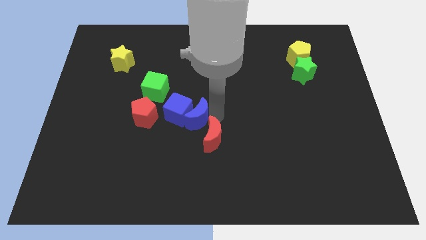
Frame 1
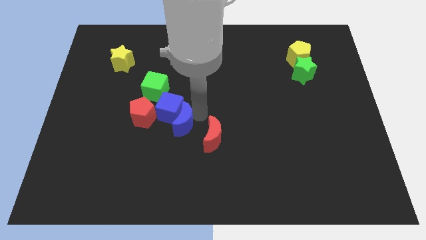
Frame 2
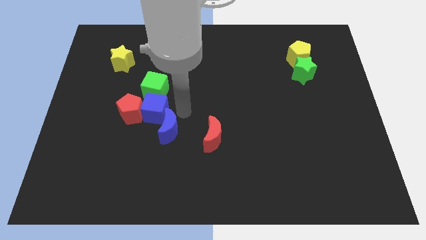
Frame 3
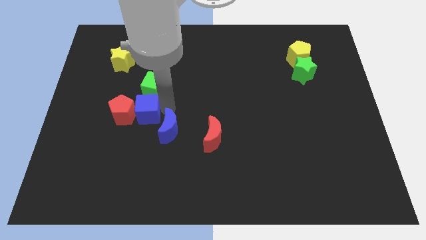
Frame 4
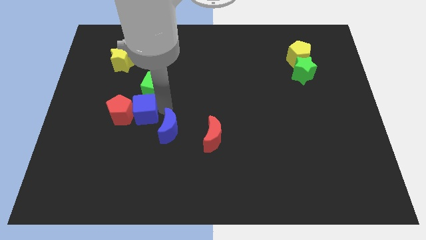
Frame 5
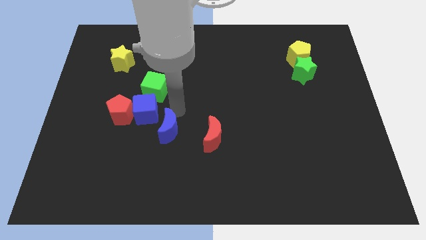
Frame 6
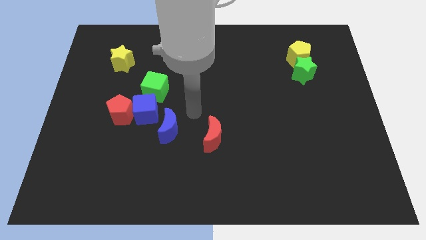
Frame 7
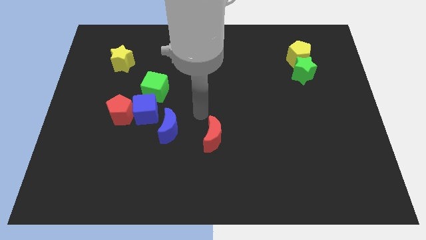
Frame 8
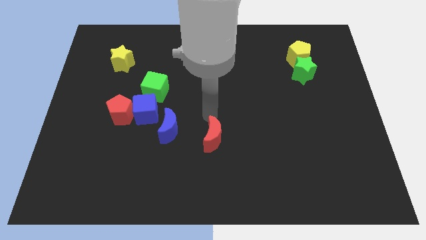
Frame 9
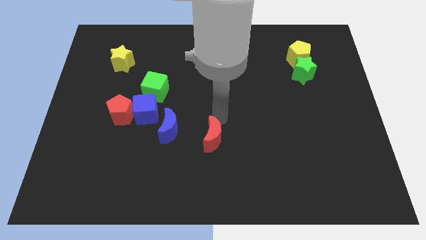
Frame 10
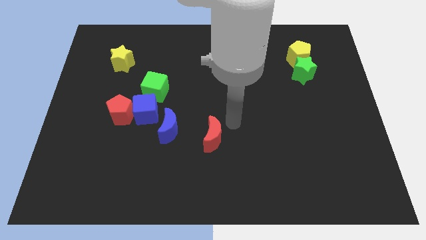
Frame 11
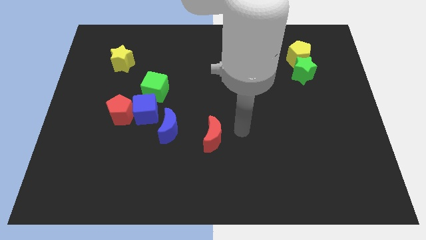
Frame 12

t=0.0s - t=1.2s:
push the blue cube into the red pentagon

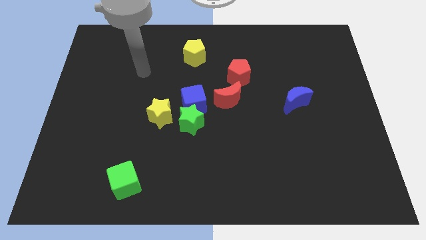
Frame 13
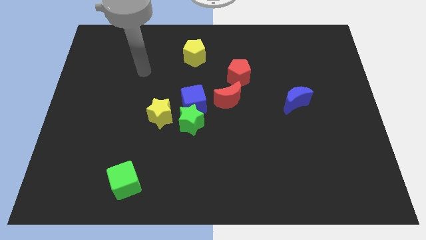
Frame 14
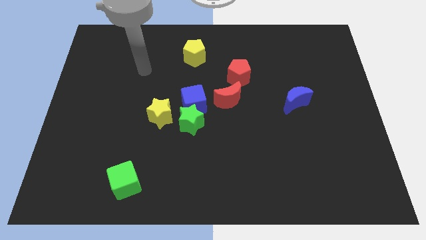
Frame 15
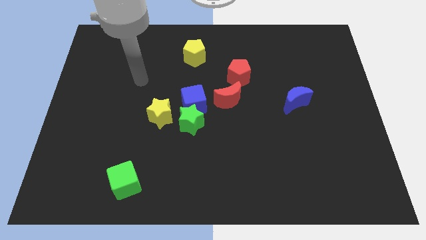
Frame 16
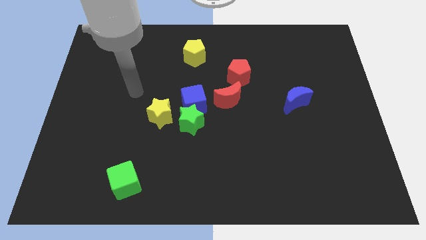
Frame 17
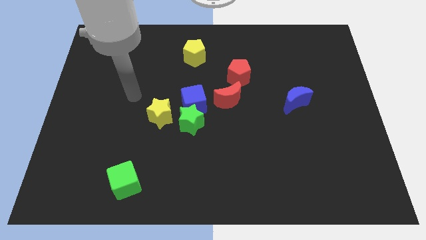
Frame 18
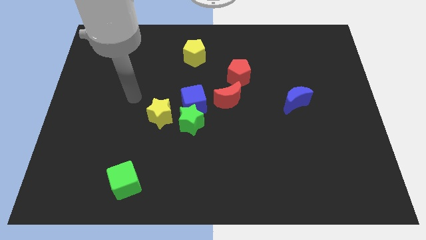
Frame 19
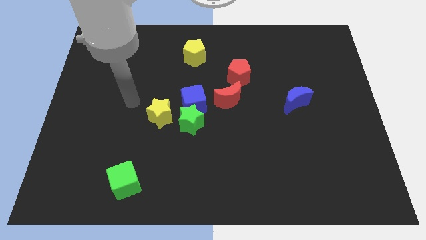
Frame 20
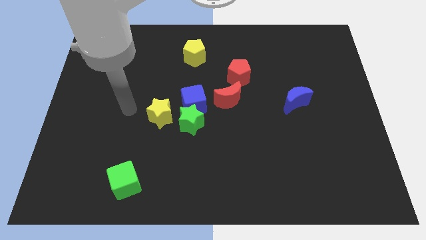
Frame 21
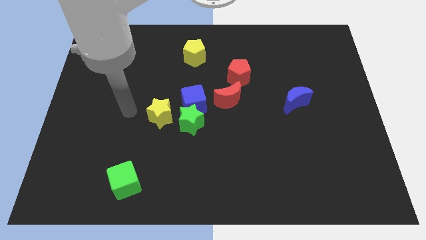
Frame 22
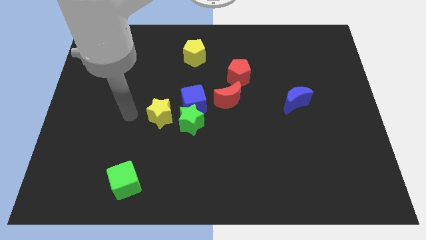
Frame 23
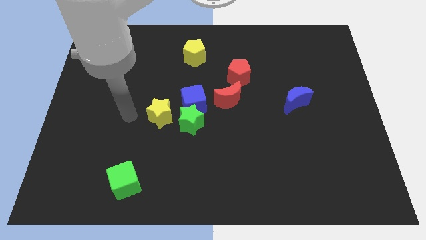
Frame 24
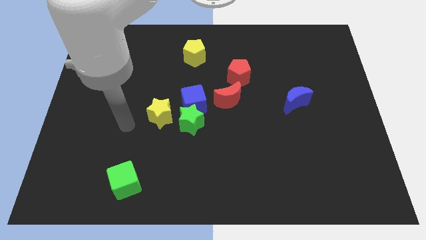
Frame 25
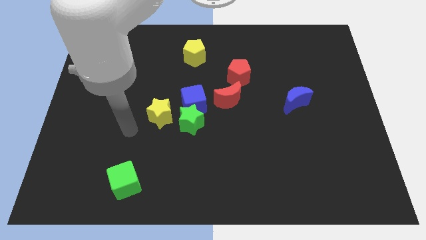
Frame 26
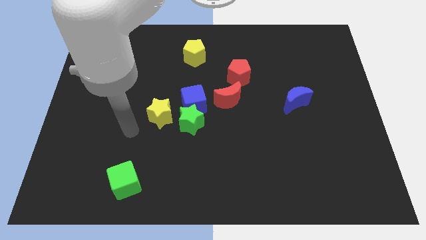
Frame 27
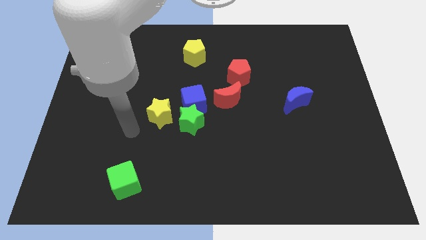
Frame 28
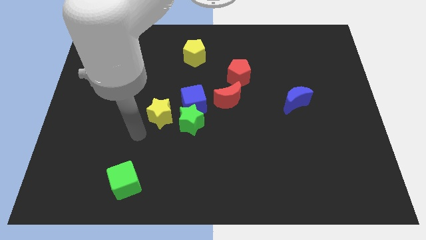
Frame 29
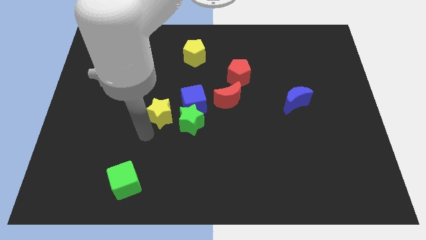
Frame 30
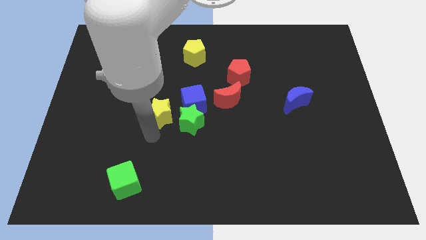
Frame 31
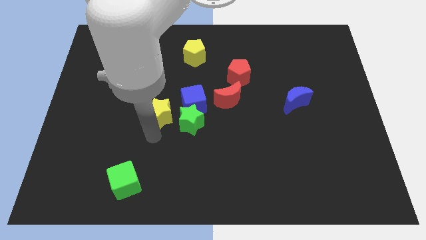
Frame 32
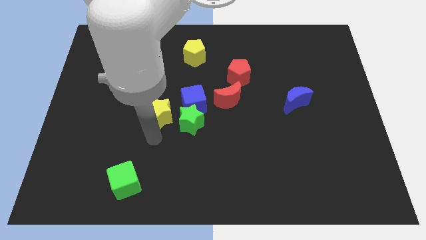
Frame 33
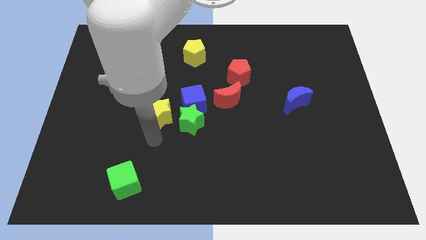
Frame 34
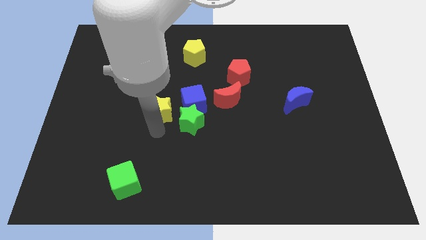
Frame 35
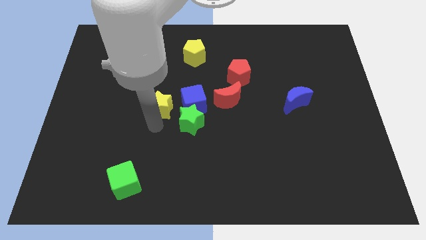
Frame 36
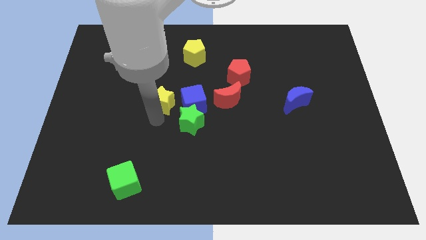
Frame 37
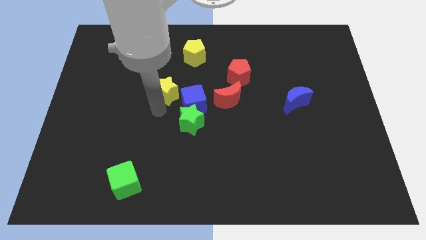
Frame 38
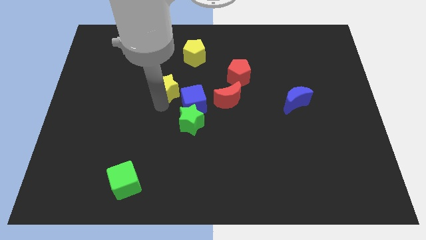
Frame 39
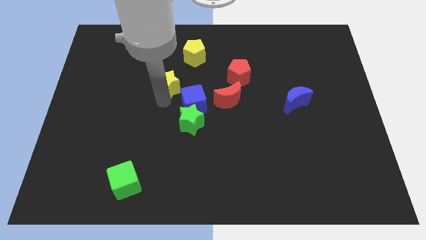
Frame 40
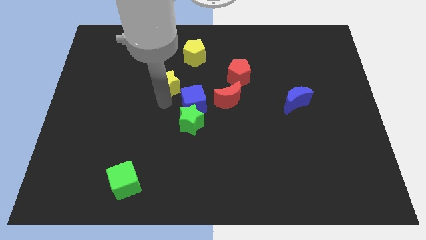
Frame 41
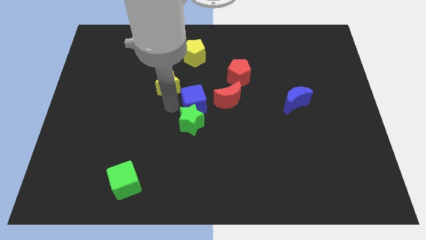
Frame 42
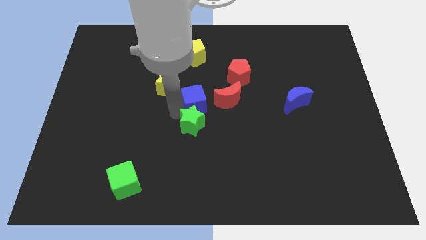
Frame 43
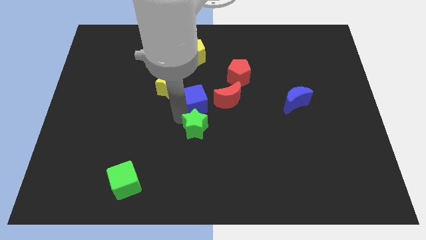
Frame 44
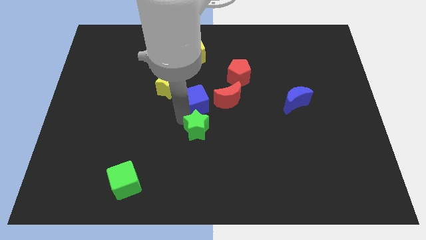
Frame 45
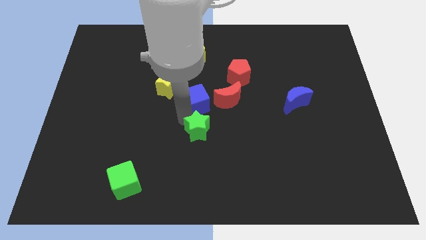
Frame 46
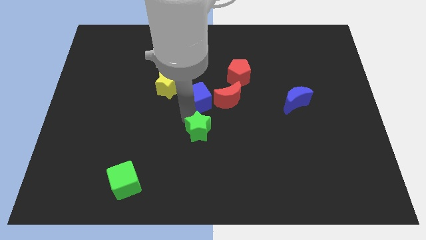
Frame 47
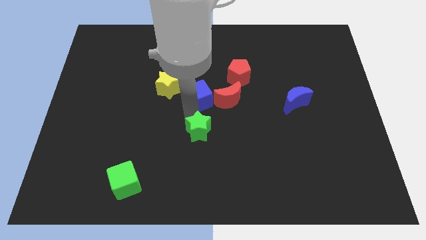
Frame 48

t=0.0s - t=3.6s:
point your arm between green star and blue cube

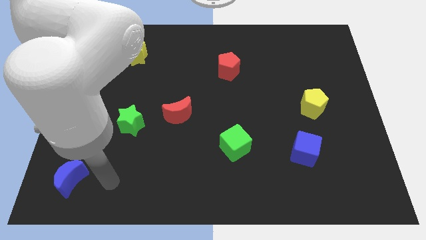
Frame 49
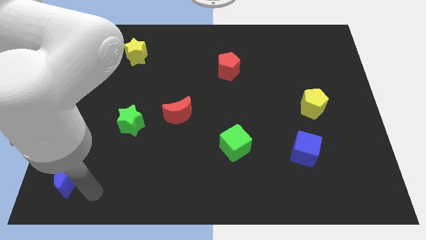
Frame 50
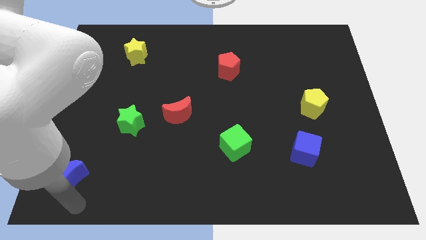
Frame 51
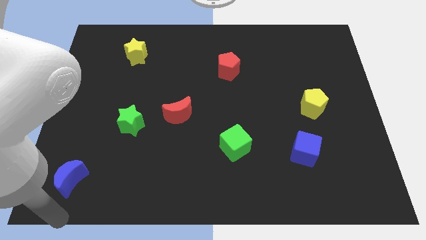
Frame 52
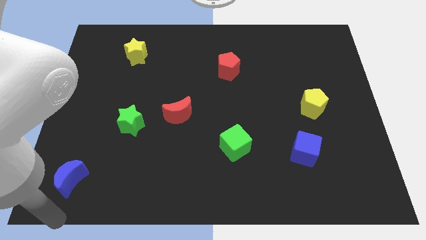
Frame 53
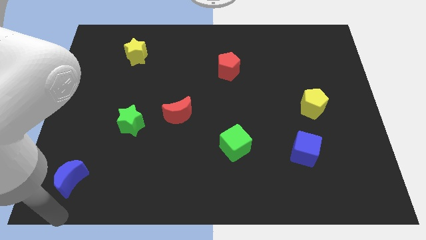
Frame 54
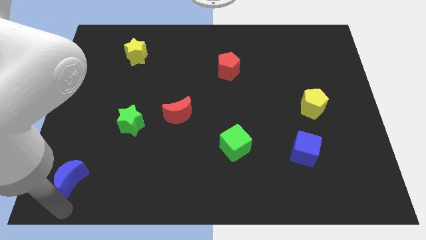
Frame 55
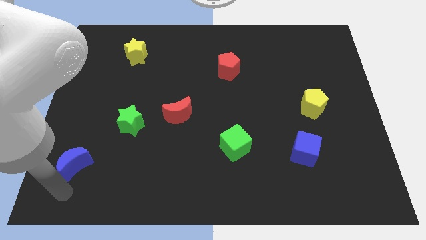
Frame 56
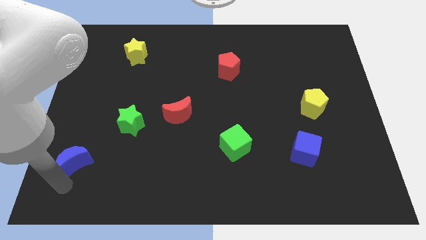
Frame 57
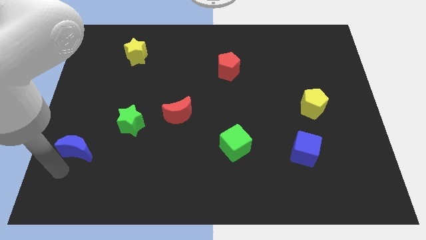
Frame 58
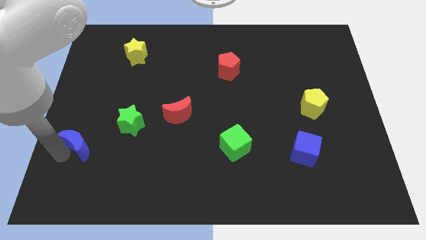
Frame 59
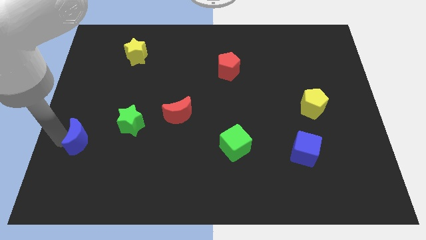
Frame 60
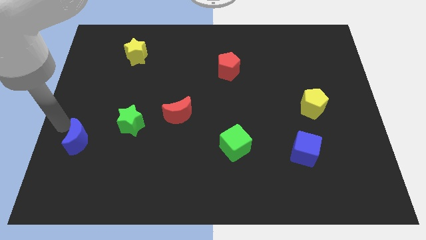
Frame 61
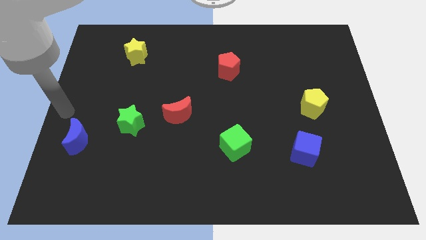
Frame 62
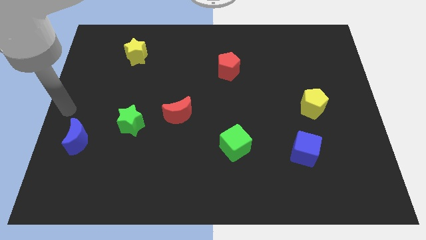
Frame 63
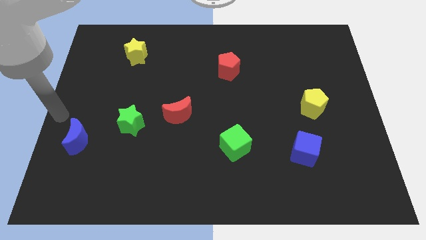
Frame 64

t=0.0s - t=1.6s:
push the blue crescent towards the top side of the board

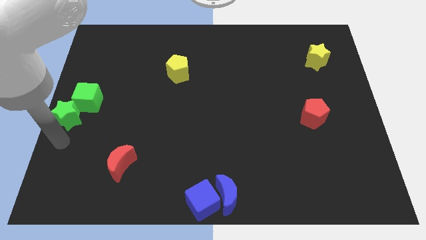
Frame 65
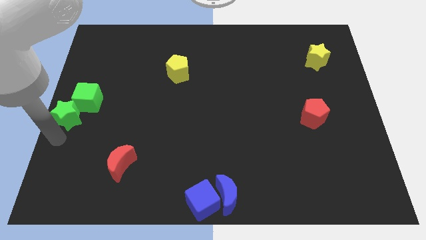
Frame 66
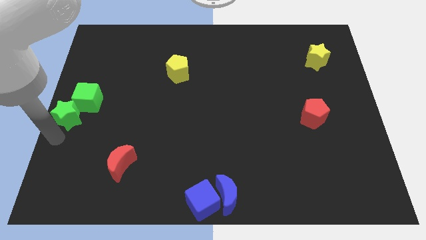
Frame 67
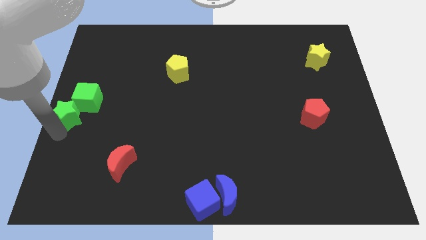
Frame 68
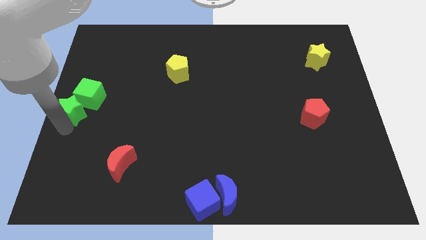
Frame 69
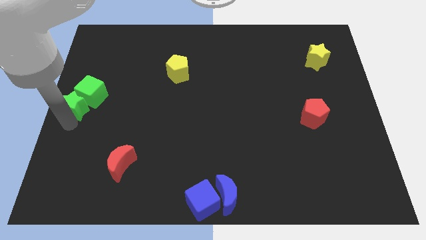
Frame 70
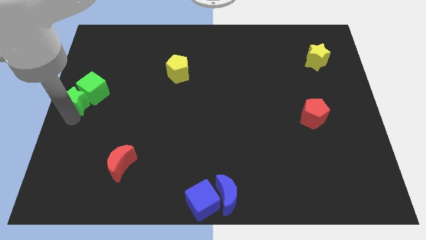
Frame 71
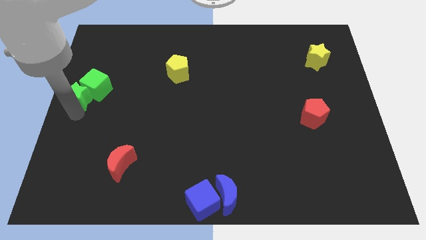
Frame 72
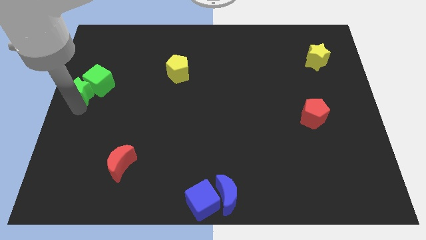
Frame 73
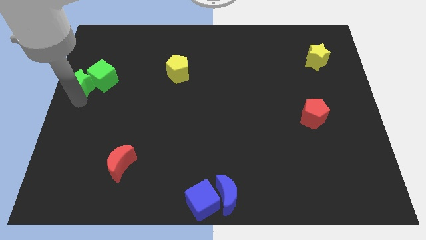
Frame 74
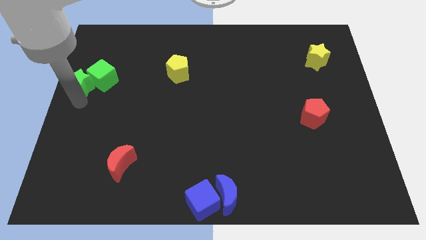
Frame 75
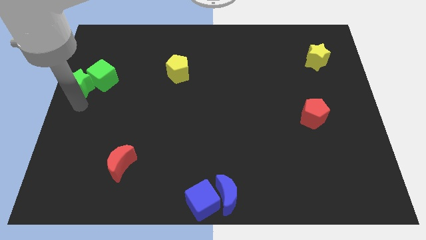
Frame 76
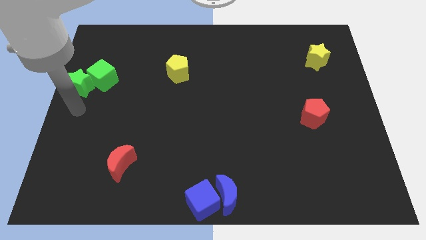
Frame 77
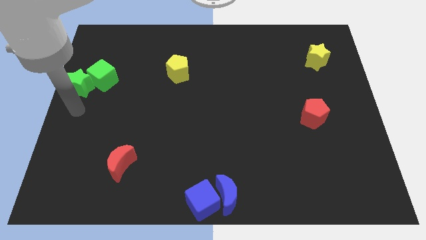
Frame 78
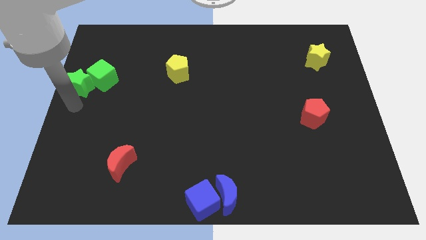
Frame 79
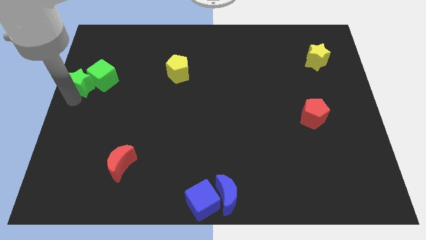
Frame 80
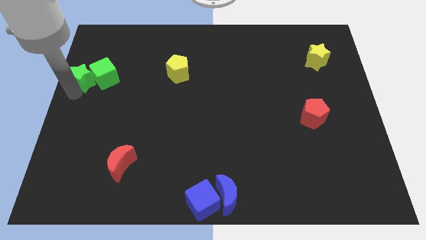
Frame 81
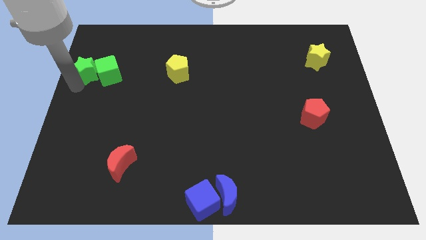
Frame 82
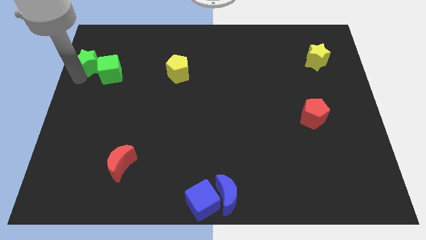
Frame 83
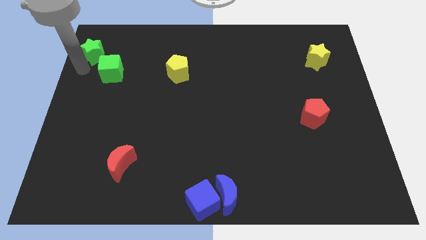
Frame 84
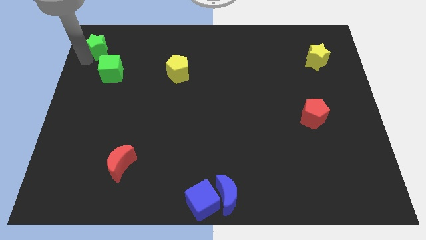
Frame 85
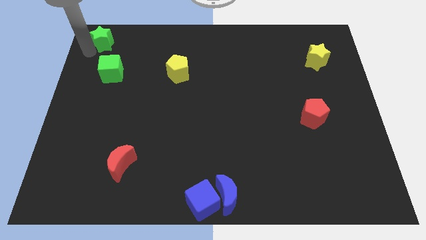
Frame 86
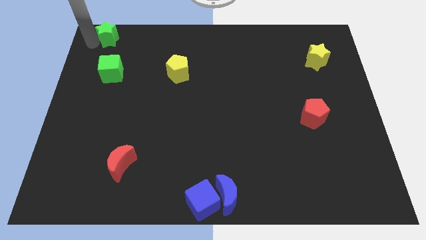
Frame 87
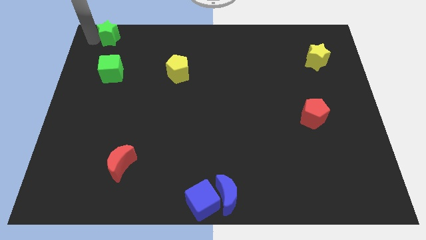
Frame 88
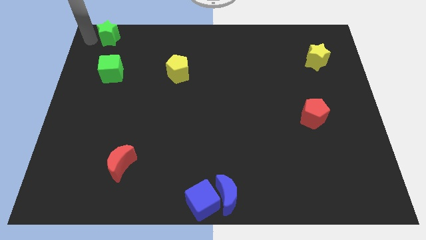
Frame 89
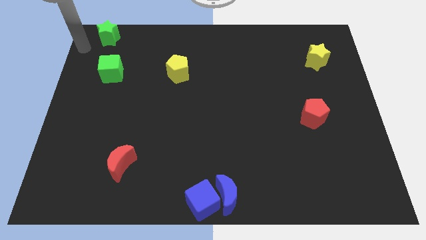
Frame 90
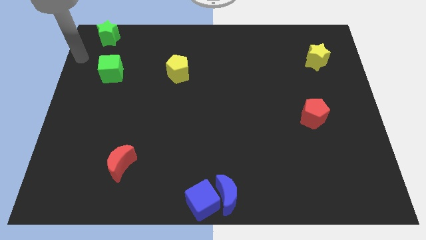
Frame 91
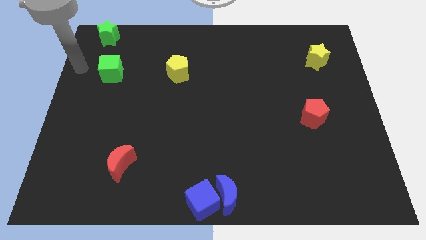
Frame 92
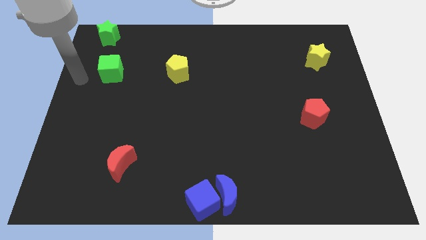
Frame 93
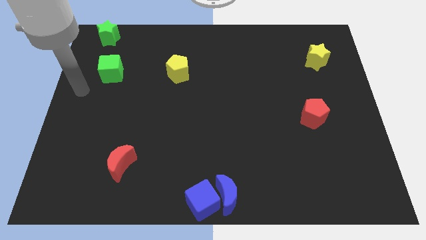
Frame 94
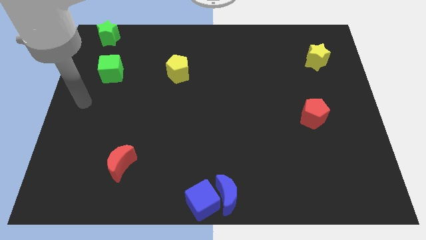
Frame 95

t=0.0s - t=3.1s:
separate green star from green cube
